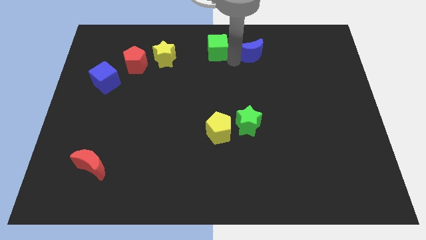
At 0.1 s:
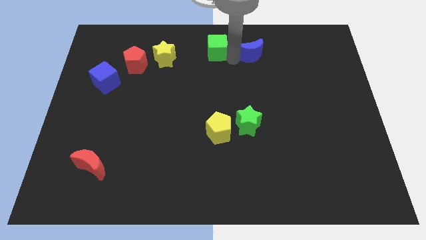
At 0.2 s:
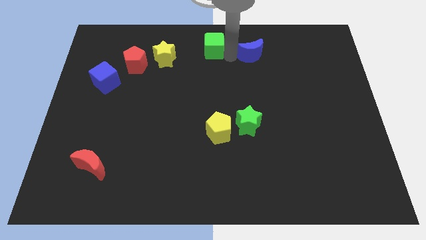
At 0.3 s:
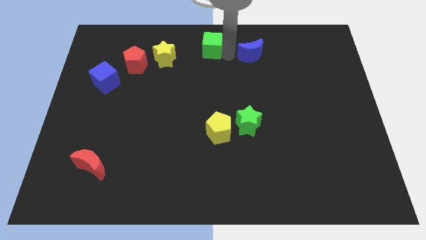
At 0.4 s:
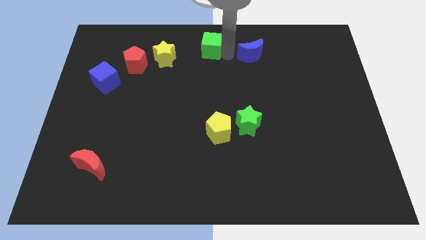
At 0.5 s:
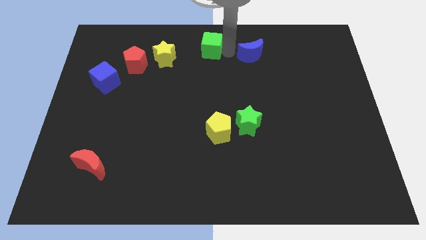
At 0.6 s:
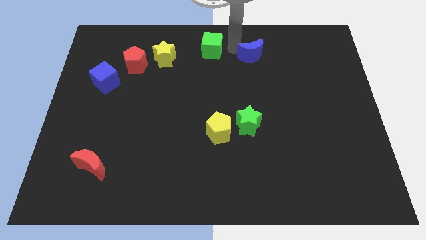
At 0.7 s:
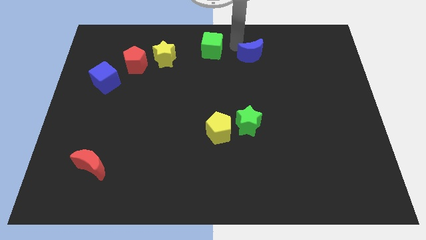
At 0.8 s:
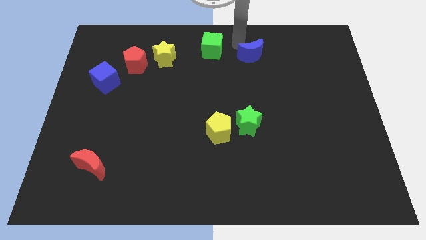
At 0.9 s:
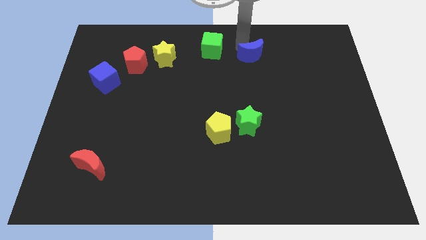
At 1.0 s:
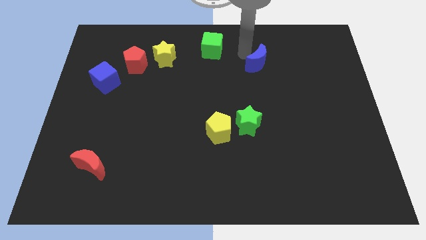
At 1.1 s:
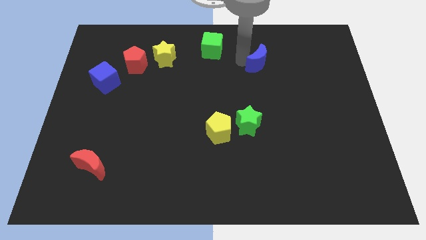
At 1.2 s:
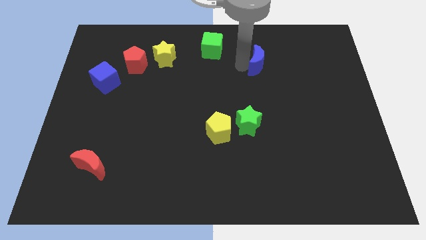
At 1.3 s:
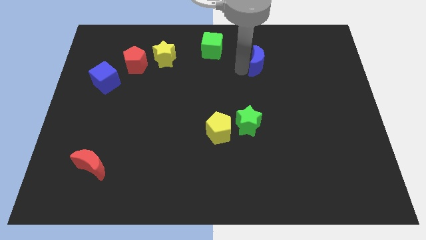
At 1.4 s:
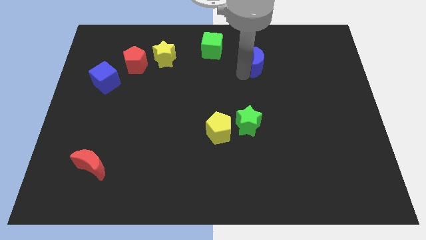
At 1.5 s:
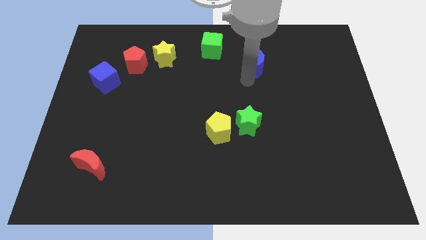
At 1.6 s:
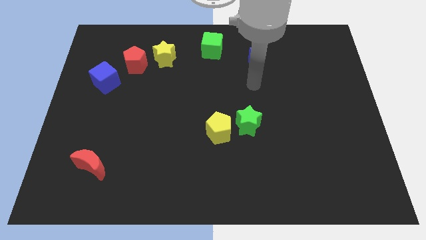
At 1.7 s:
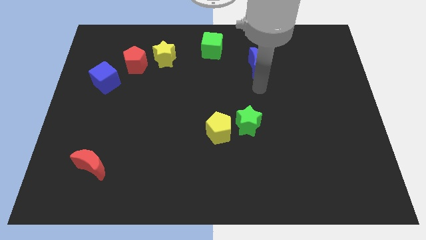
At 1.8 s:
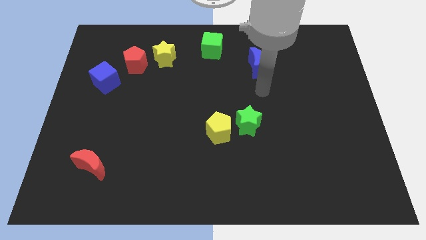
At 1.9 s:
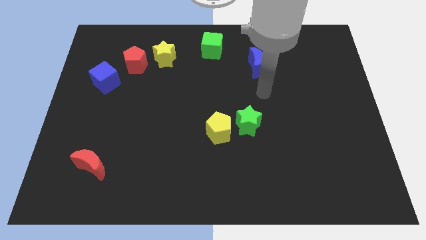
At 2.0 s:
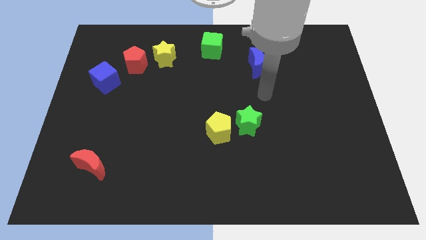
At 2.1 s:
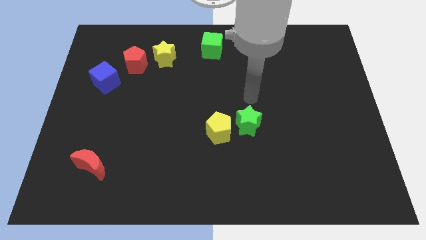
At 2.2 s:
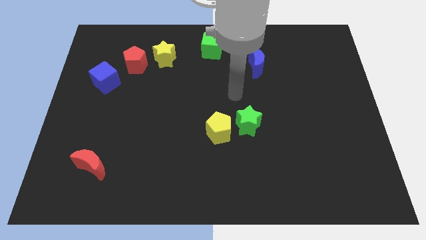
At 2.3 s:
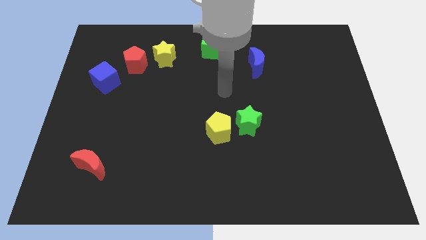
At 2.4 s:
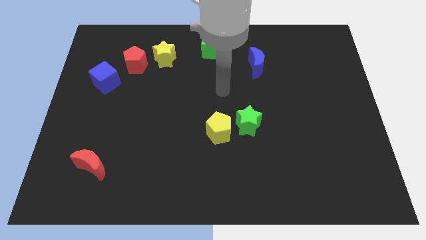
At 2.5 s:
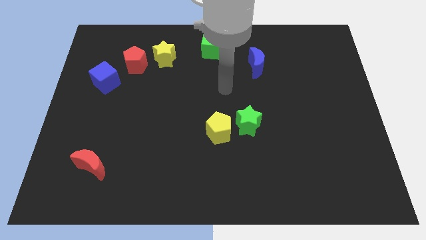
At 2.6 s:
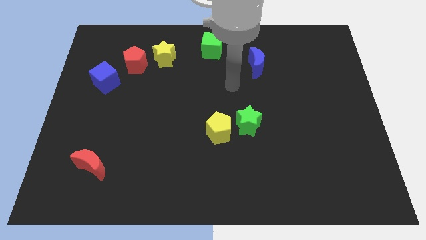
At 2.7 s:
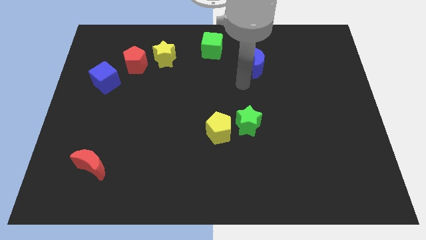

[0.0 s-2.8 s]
place your arm above the yellow pentagon

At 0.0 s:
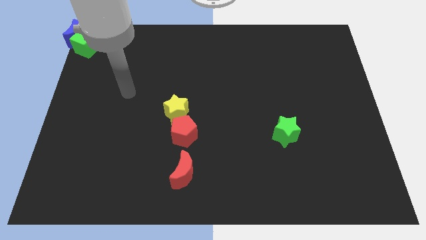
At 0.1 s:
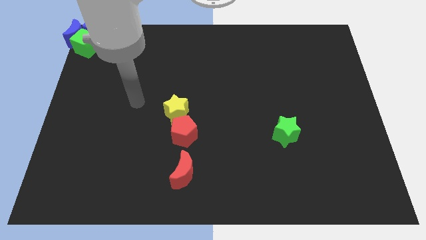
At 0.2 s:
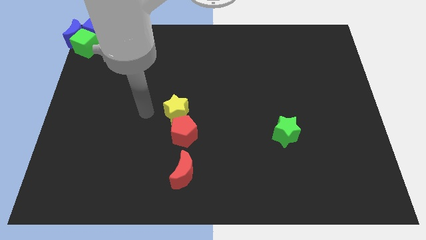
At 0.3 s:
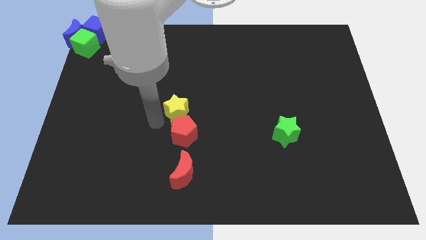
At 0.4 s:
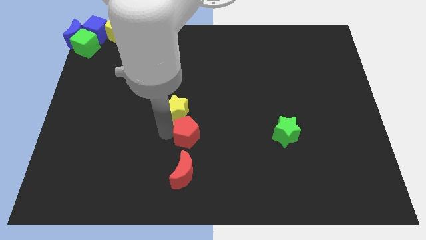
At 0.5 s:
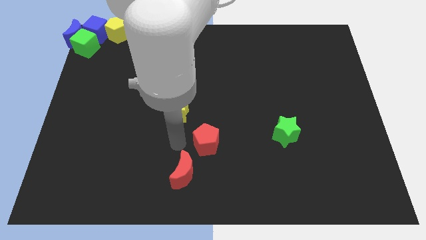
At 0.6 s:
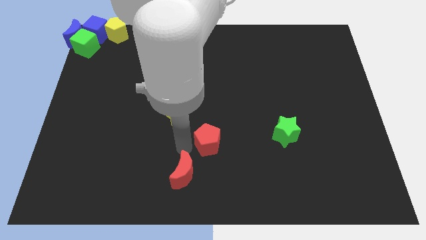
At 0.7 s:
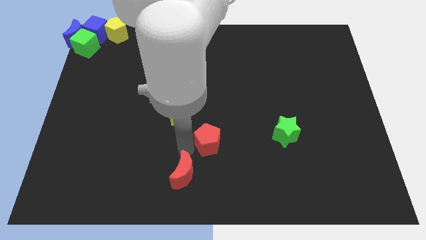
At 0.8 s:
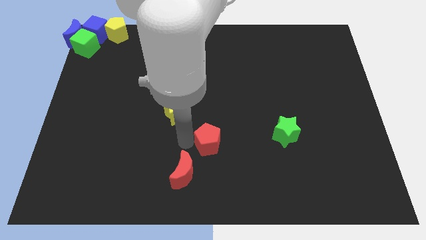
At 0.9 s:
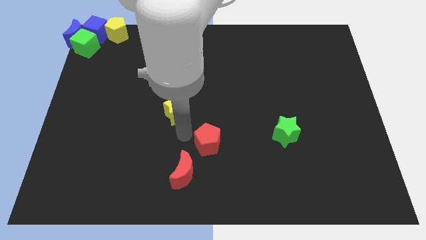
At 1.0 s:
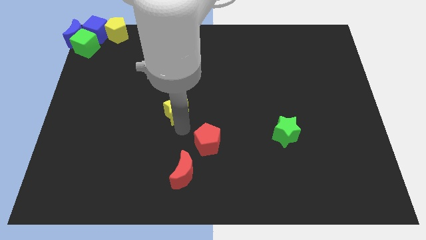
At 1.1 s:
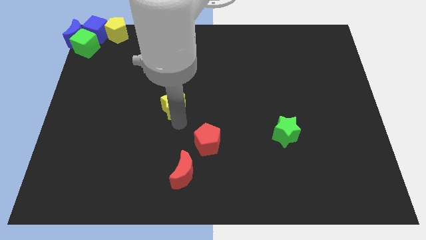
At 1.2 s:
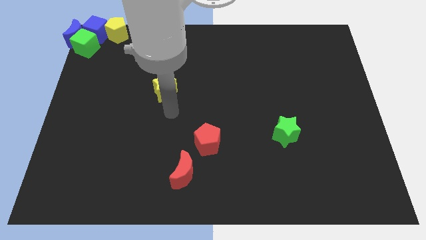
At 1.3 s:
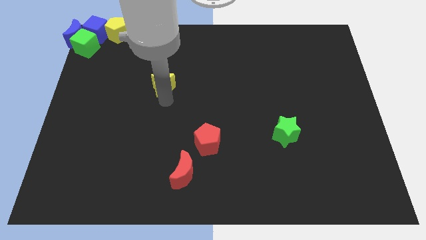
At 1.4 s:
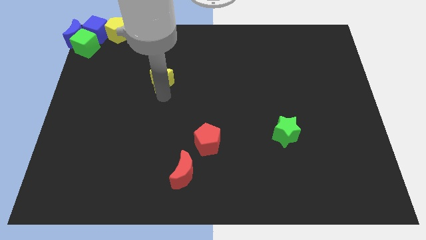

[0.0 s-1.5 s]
separate the yellow star and red pentagon

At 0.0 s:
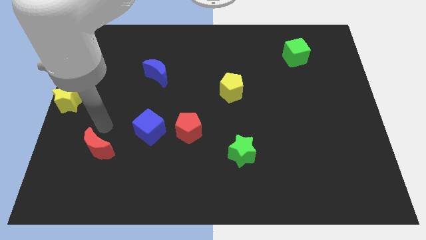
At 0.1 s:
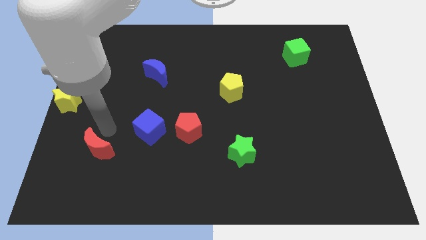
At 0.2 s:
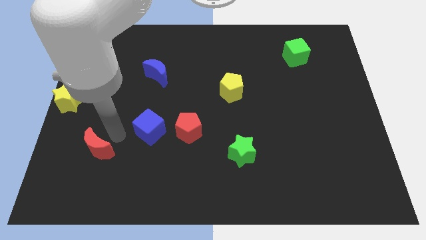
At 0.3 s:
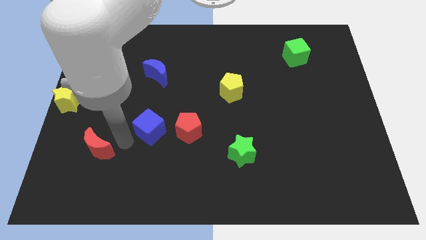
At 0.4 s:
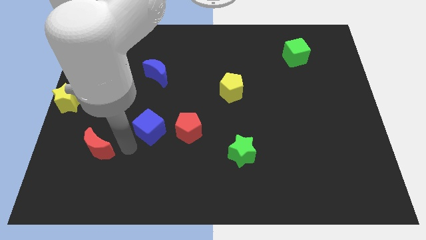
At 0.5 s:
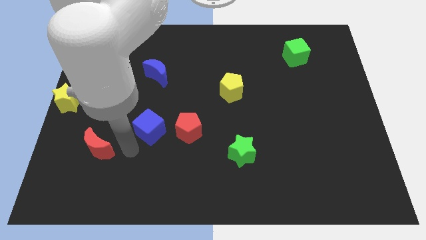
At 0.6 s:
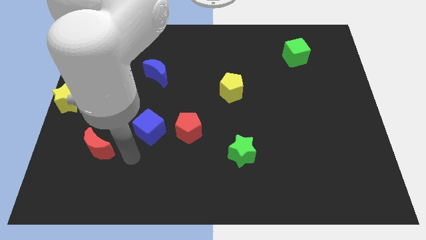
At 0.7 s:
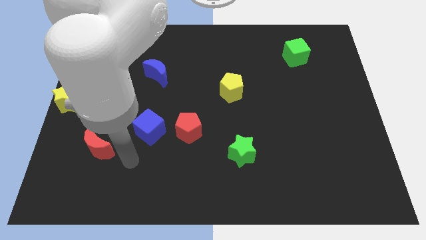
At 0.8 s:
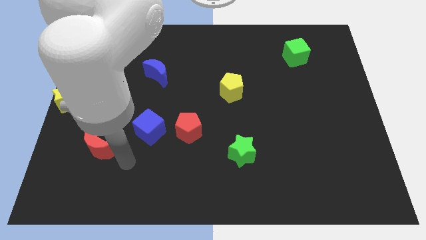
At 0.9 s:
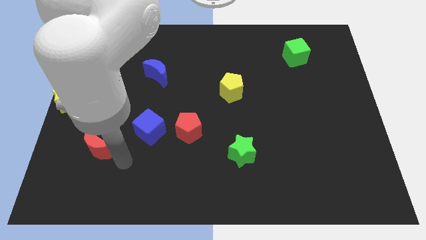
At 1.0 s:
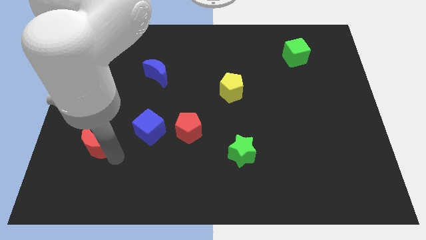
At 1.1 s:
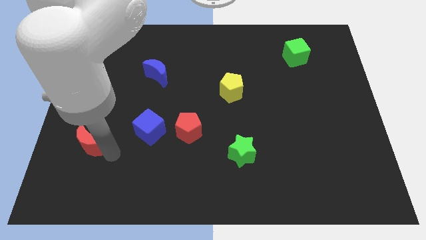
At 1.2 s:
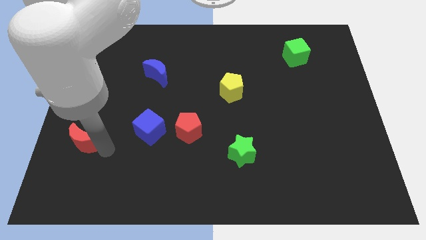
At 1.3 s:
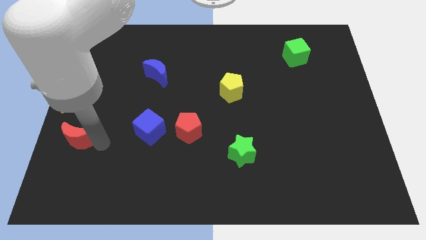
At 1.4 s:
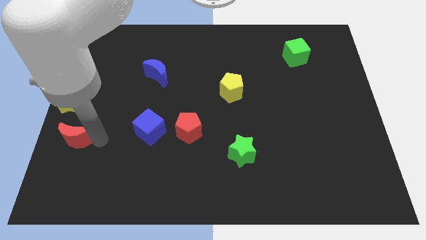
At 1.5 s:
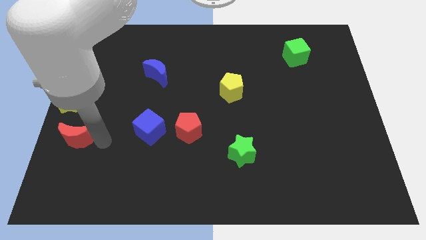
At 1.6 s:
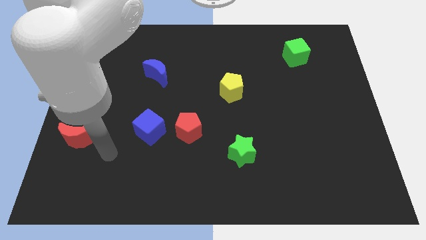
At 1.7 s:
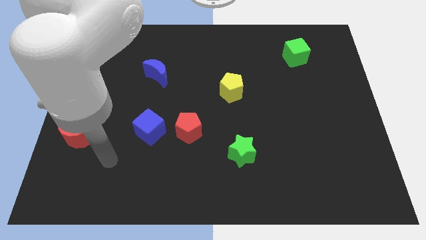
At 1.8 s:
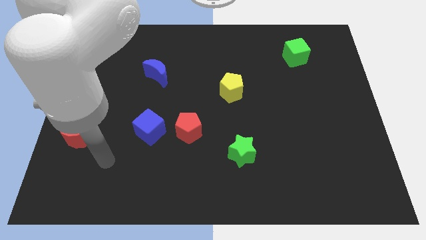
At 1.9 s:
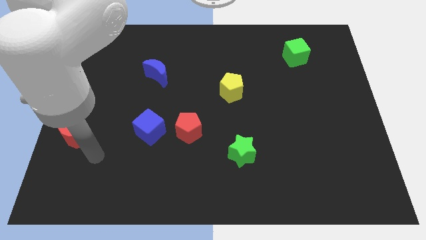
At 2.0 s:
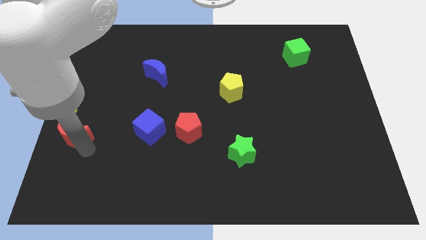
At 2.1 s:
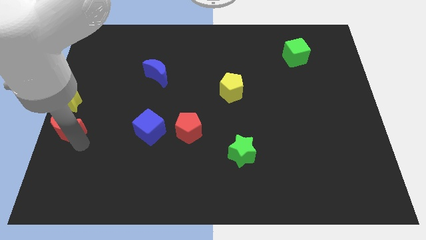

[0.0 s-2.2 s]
place the red moon below the yellow star

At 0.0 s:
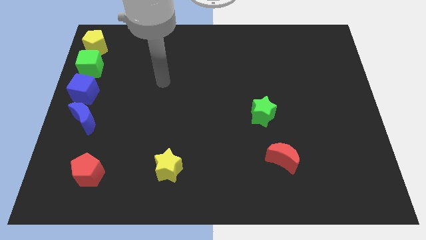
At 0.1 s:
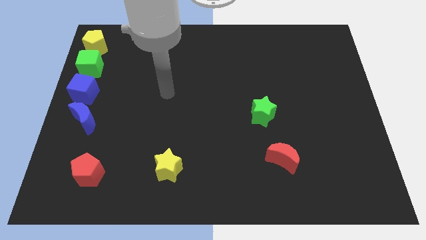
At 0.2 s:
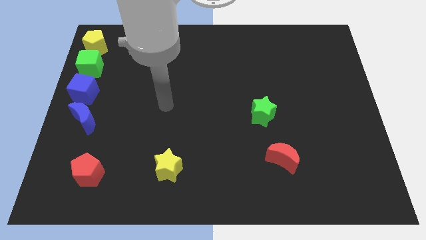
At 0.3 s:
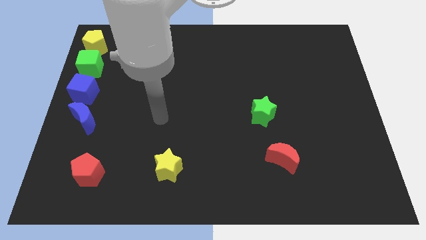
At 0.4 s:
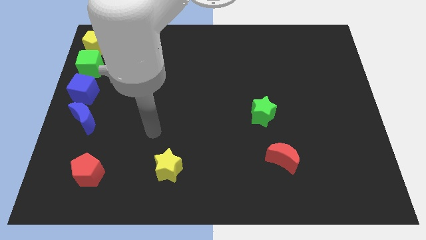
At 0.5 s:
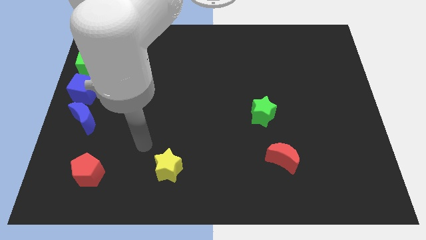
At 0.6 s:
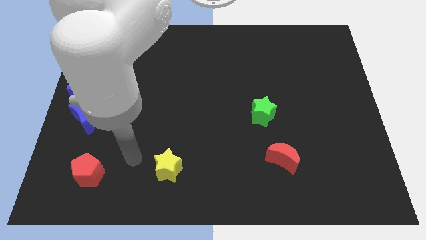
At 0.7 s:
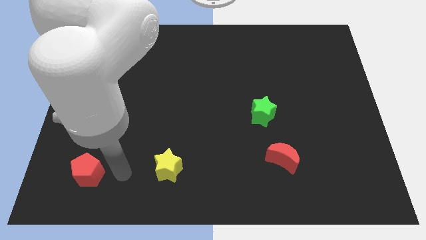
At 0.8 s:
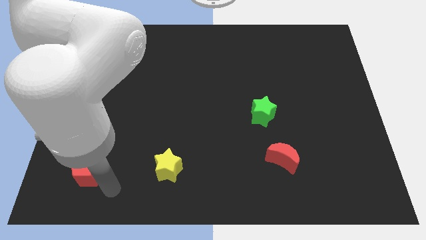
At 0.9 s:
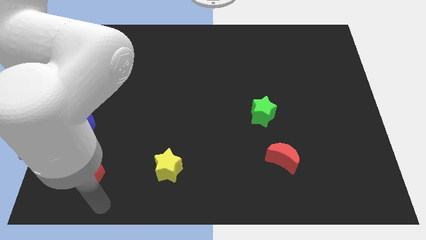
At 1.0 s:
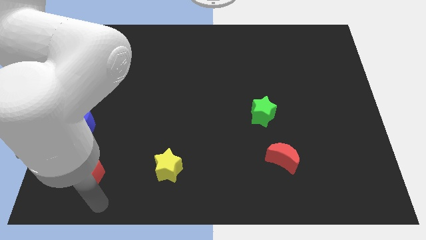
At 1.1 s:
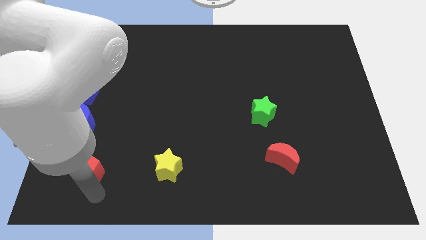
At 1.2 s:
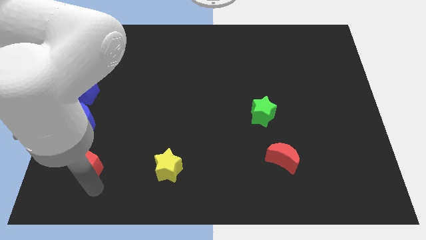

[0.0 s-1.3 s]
put your hand at the bottom right side of the red pentagon

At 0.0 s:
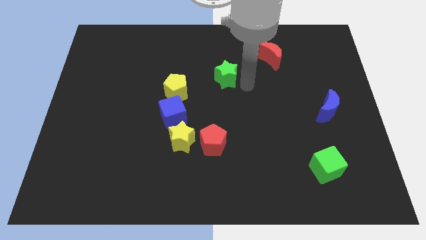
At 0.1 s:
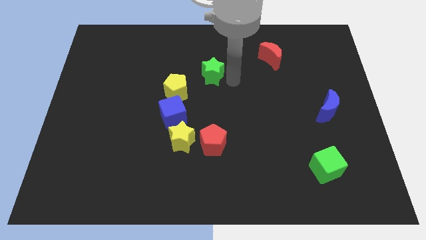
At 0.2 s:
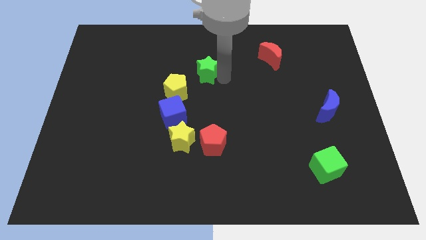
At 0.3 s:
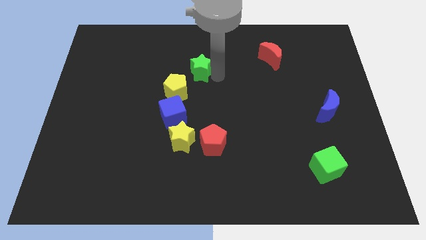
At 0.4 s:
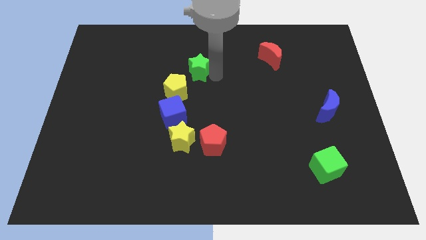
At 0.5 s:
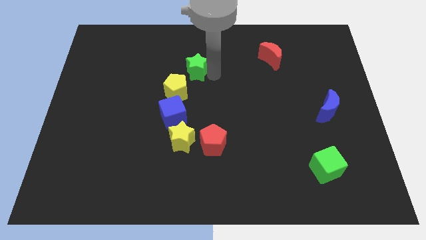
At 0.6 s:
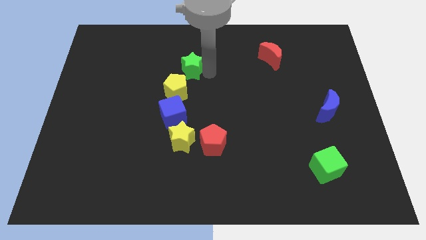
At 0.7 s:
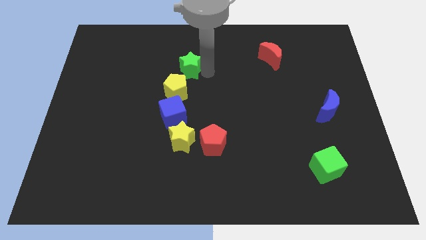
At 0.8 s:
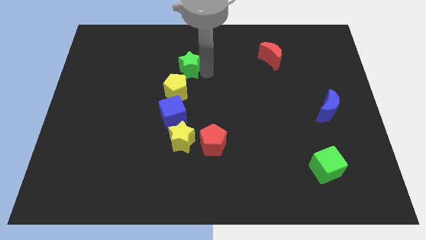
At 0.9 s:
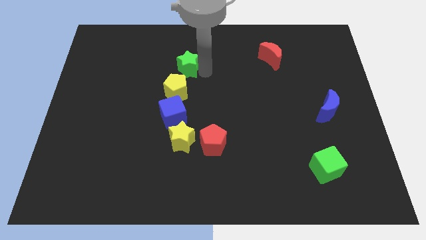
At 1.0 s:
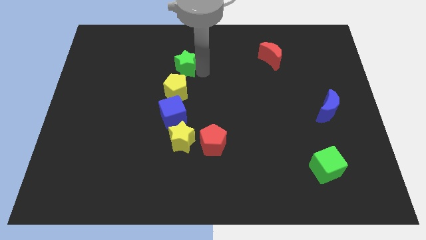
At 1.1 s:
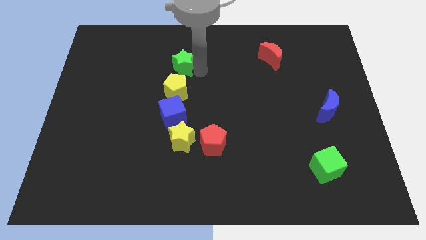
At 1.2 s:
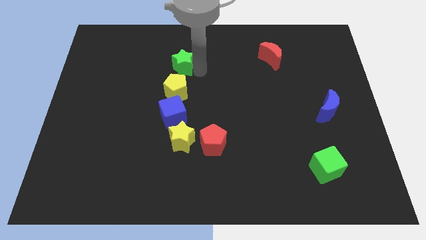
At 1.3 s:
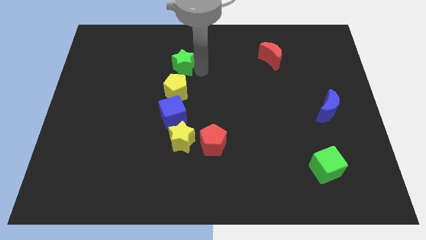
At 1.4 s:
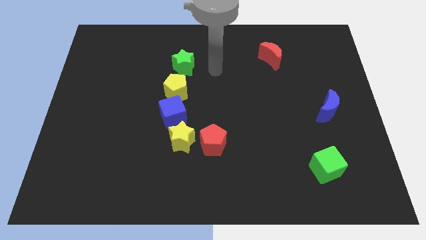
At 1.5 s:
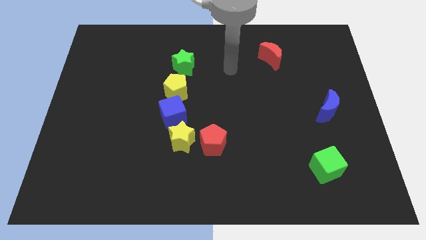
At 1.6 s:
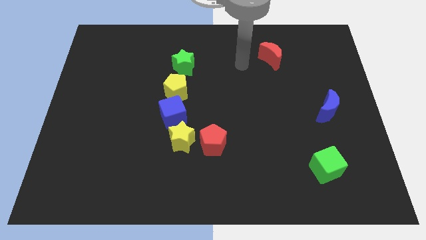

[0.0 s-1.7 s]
place green star above the yellow pentagon
